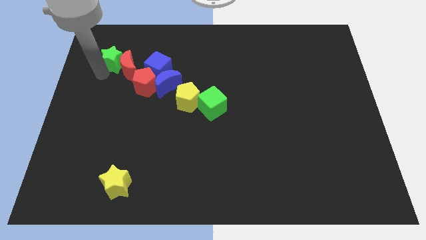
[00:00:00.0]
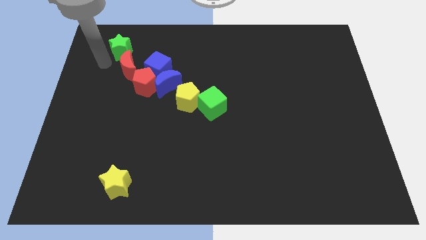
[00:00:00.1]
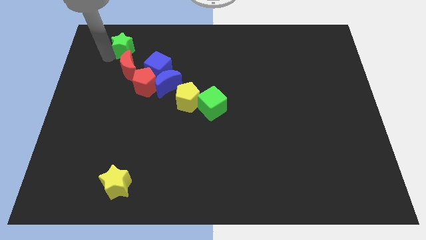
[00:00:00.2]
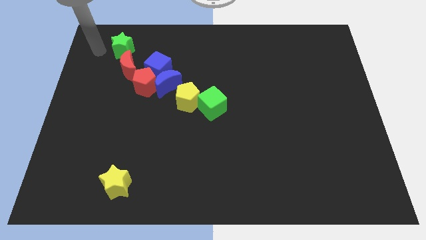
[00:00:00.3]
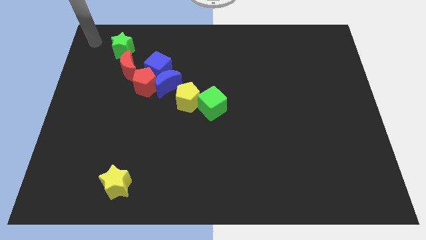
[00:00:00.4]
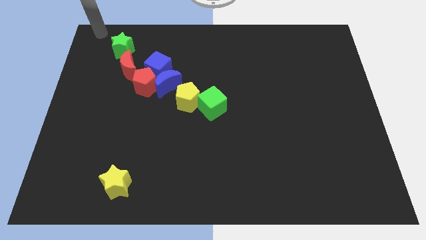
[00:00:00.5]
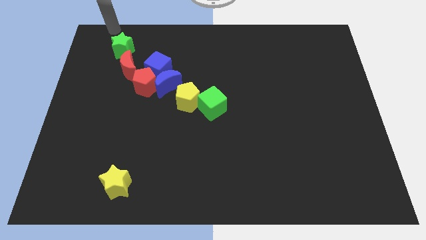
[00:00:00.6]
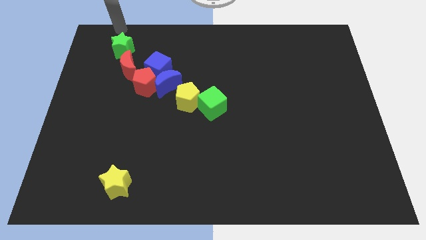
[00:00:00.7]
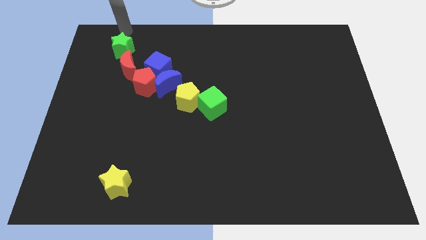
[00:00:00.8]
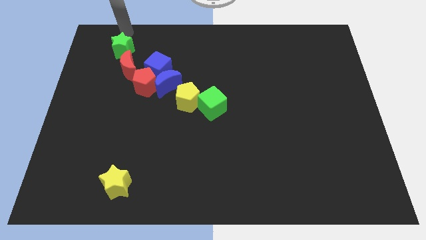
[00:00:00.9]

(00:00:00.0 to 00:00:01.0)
place the green star on top of the red moon

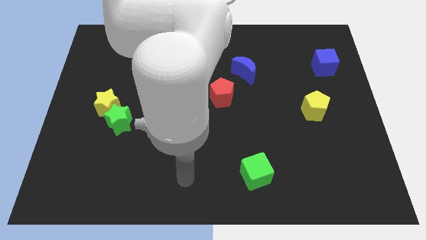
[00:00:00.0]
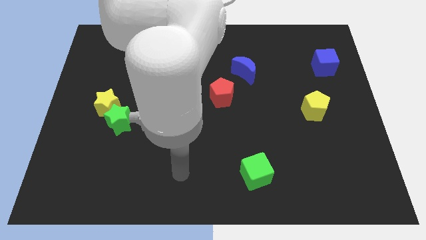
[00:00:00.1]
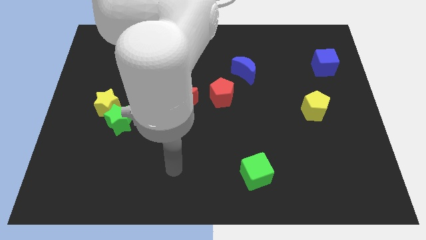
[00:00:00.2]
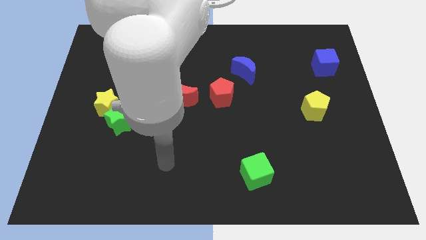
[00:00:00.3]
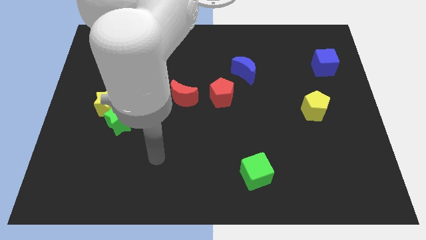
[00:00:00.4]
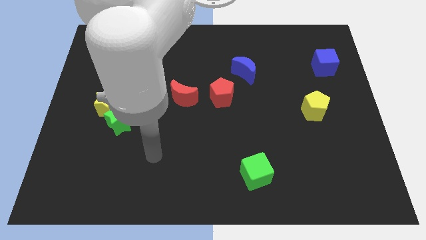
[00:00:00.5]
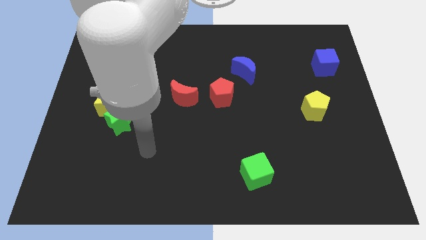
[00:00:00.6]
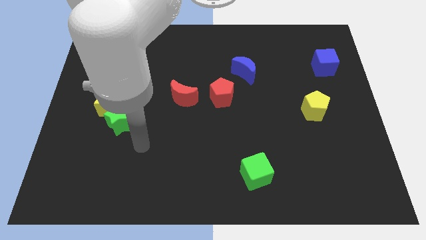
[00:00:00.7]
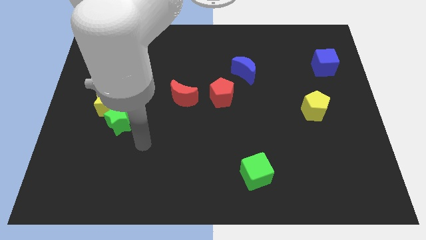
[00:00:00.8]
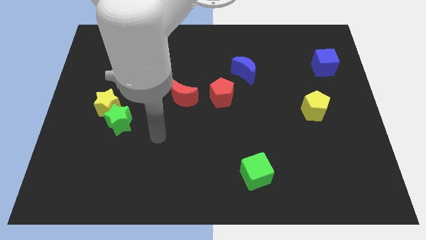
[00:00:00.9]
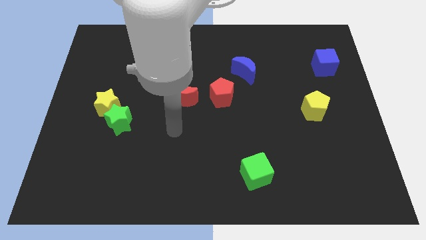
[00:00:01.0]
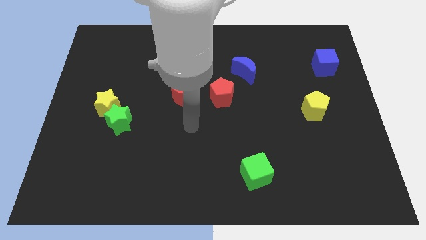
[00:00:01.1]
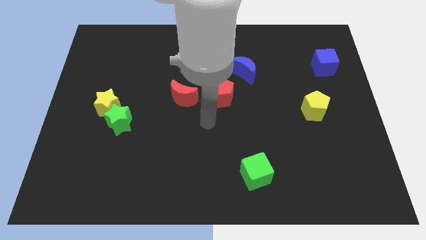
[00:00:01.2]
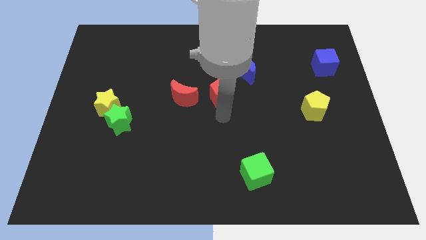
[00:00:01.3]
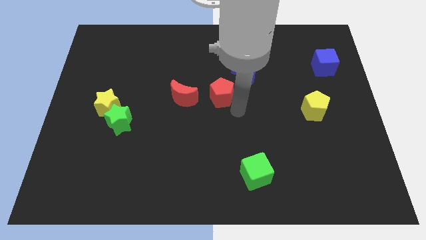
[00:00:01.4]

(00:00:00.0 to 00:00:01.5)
place your arm below the red pentagon

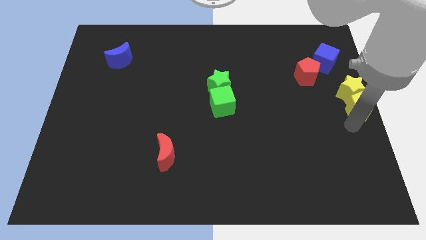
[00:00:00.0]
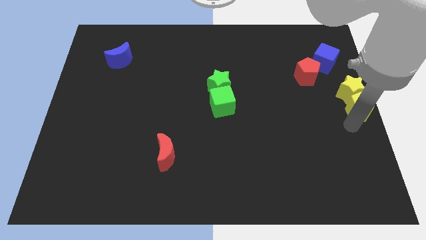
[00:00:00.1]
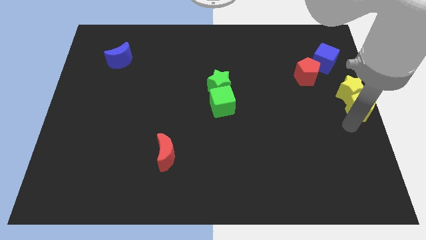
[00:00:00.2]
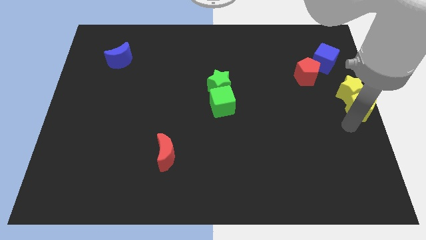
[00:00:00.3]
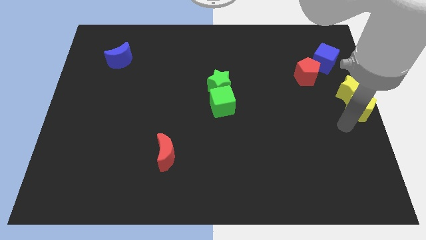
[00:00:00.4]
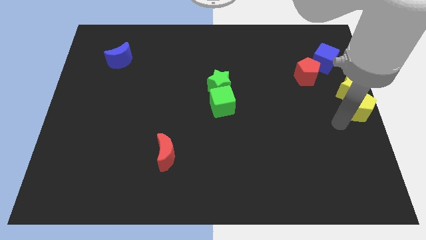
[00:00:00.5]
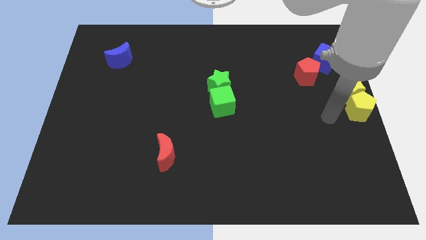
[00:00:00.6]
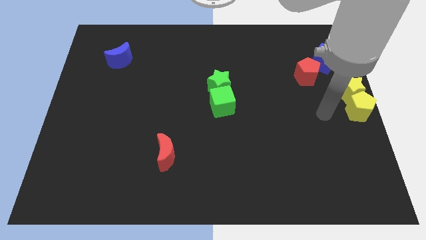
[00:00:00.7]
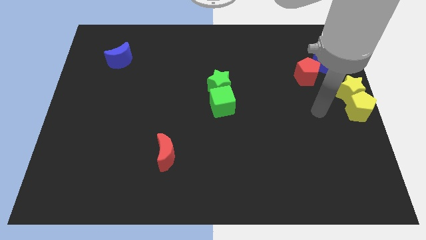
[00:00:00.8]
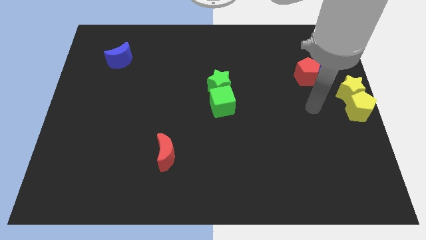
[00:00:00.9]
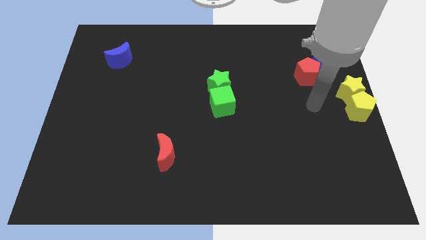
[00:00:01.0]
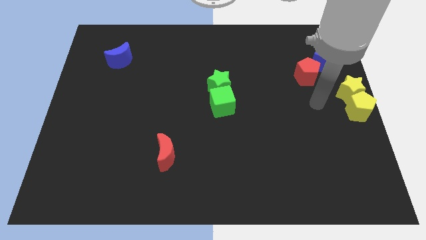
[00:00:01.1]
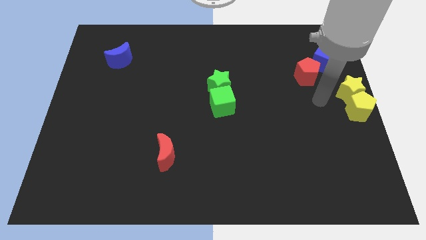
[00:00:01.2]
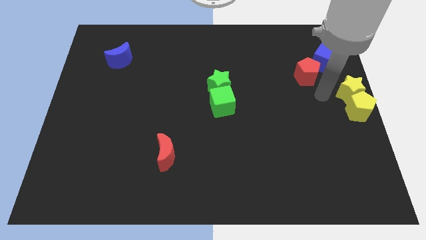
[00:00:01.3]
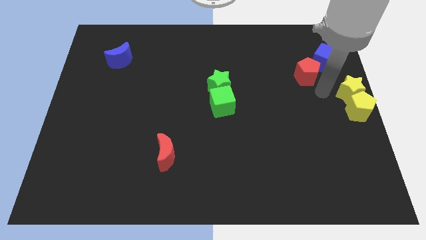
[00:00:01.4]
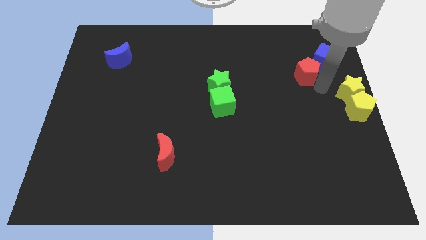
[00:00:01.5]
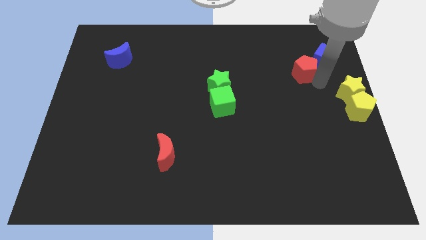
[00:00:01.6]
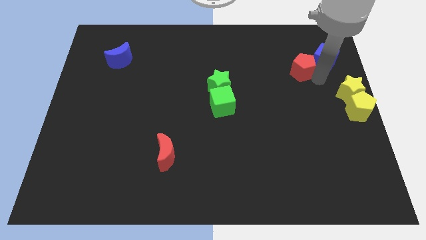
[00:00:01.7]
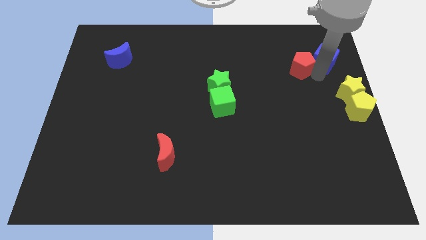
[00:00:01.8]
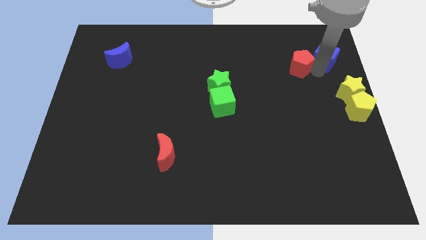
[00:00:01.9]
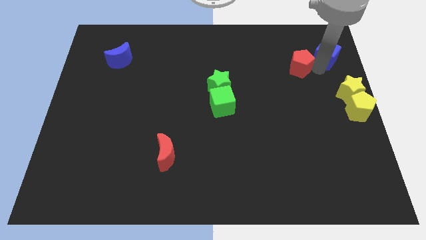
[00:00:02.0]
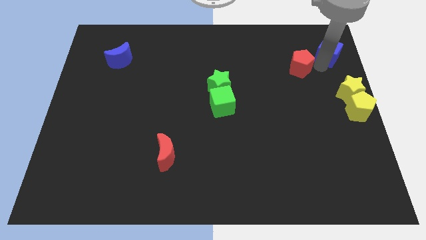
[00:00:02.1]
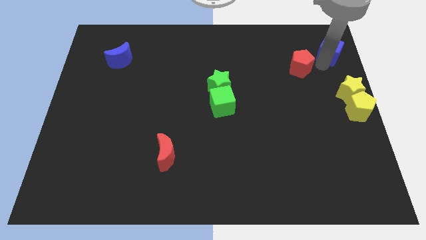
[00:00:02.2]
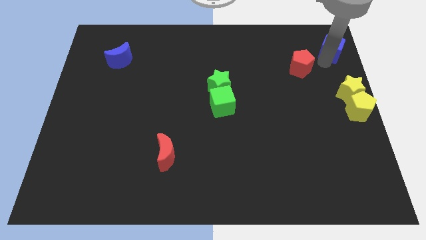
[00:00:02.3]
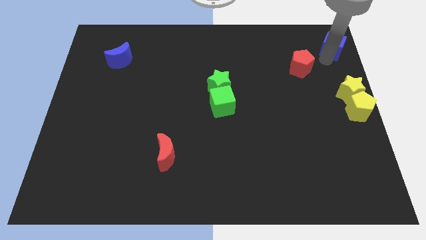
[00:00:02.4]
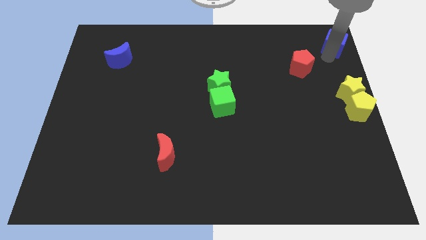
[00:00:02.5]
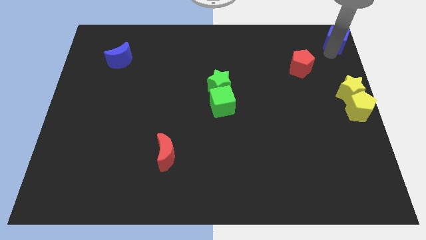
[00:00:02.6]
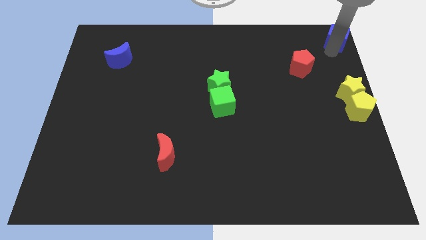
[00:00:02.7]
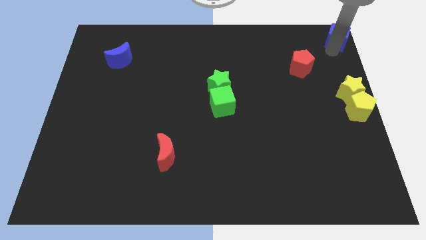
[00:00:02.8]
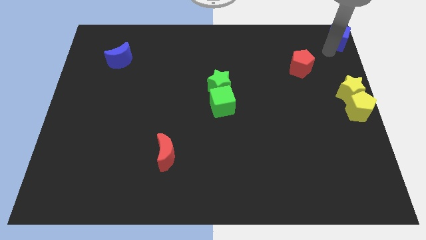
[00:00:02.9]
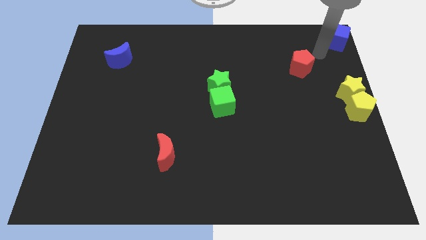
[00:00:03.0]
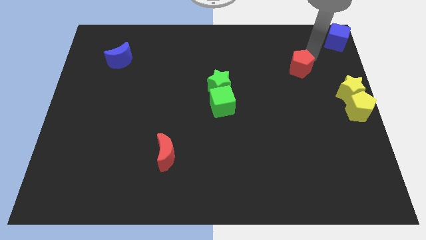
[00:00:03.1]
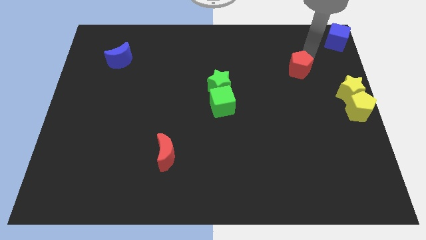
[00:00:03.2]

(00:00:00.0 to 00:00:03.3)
move the blue cube and the red pentagon away from each other

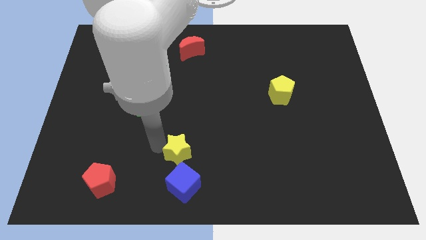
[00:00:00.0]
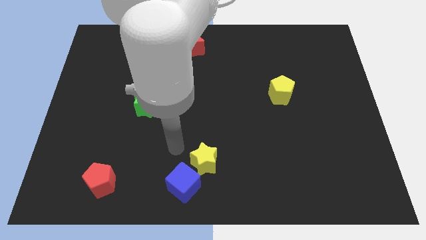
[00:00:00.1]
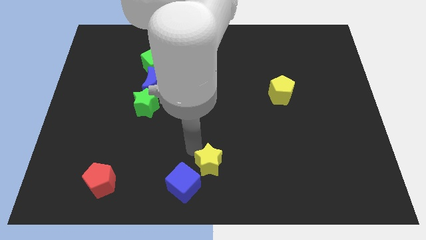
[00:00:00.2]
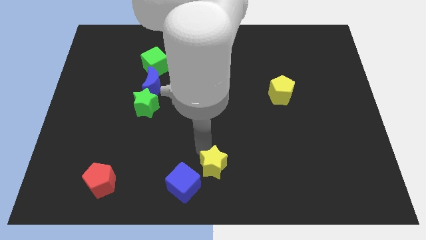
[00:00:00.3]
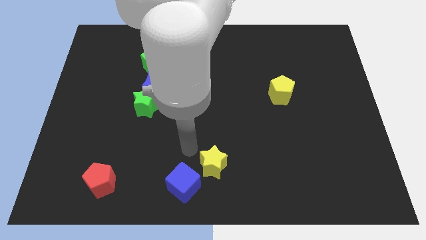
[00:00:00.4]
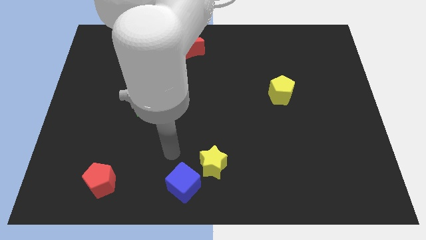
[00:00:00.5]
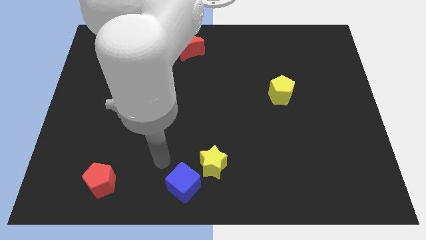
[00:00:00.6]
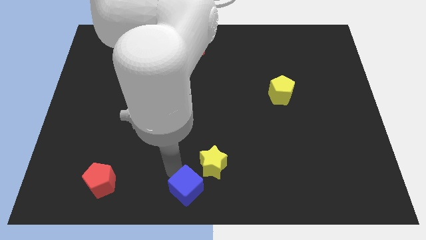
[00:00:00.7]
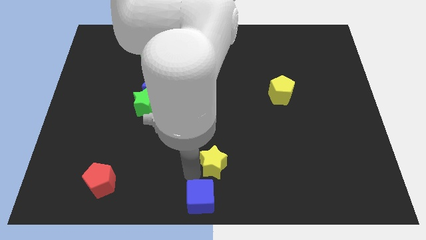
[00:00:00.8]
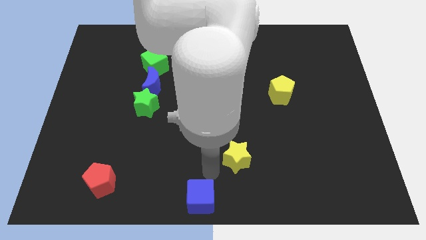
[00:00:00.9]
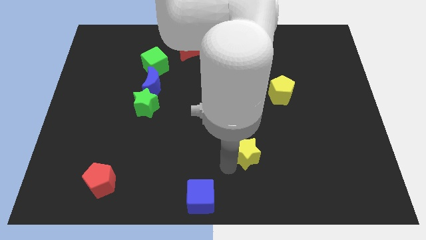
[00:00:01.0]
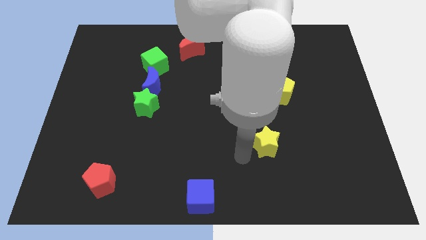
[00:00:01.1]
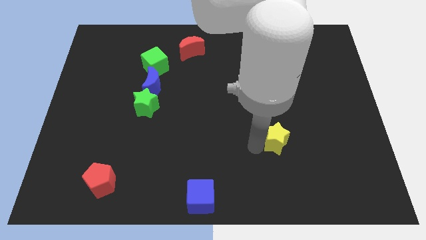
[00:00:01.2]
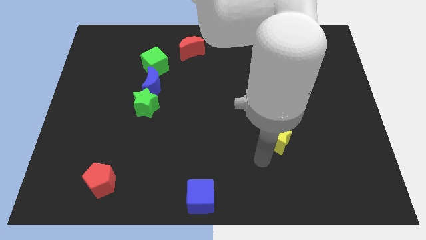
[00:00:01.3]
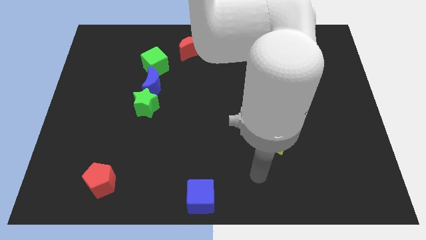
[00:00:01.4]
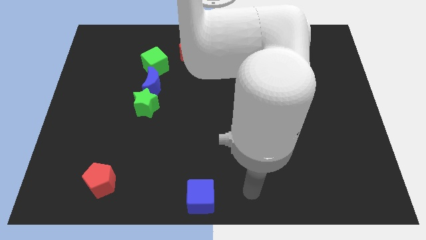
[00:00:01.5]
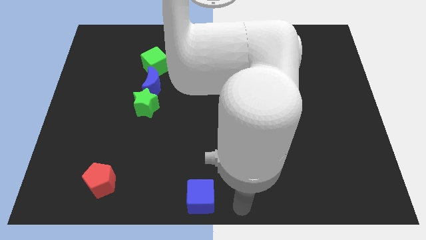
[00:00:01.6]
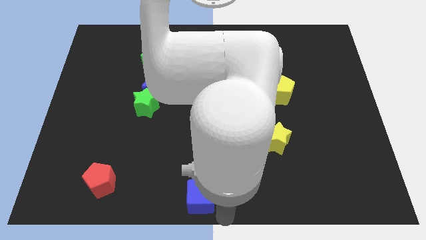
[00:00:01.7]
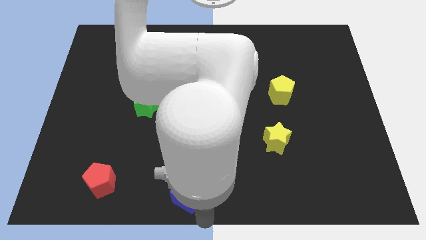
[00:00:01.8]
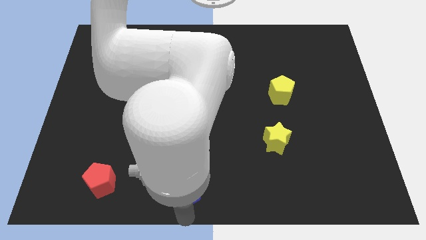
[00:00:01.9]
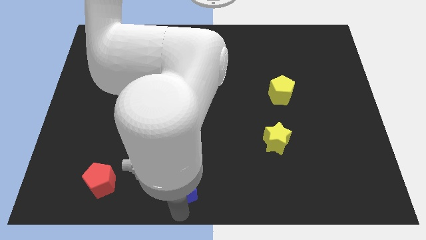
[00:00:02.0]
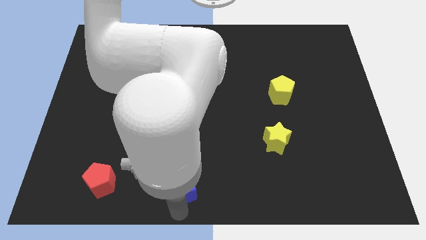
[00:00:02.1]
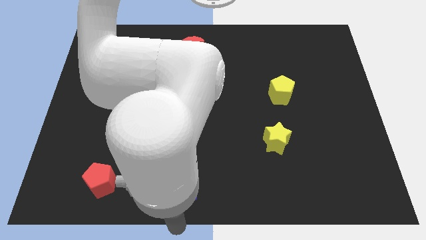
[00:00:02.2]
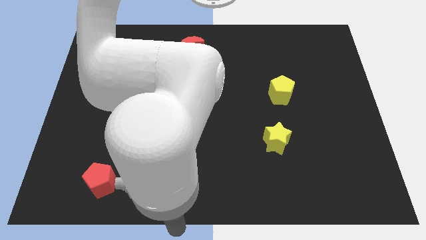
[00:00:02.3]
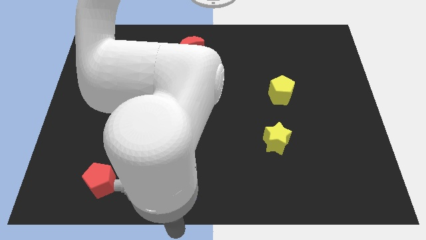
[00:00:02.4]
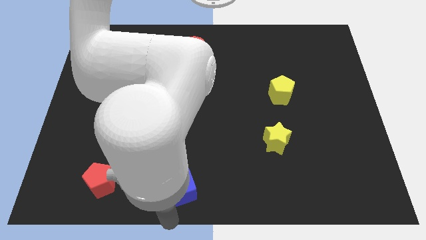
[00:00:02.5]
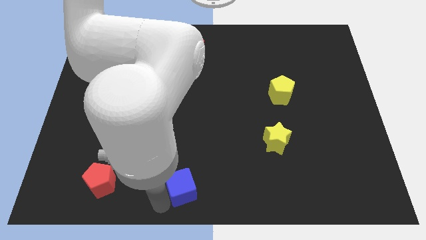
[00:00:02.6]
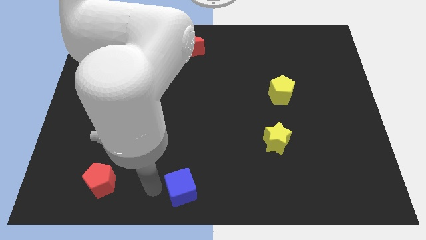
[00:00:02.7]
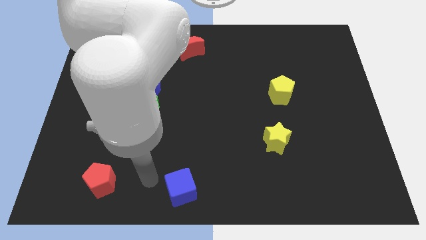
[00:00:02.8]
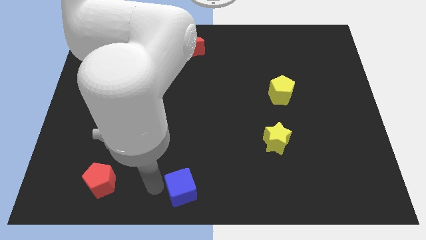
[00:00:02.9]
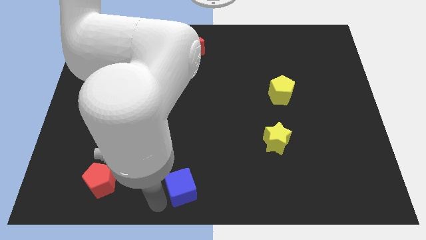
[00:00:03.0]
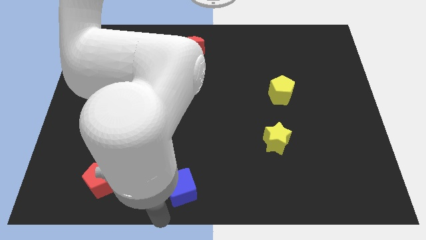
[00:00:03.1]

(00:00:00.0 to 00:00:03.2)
move yellow star below the yellow pentagon
